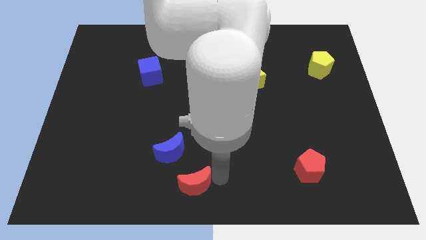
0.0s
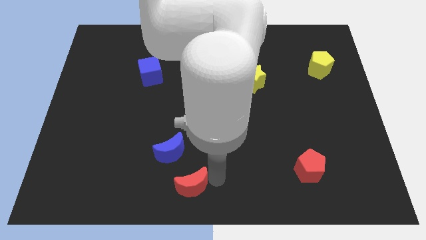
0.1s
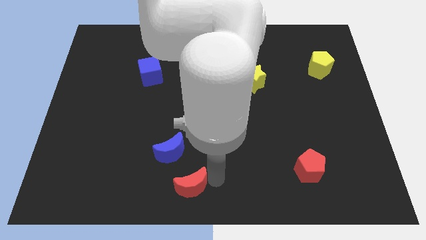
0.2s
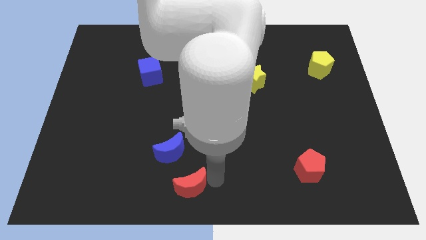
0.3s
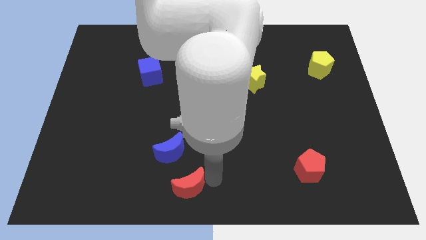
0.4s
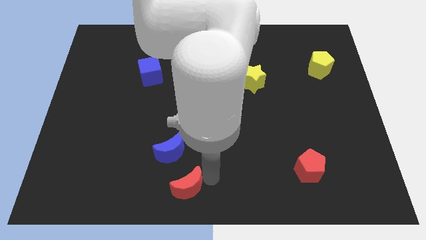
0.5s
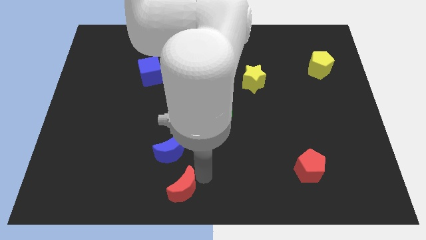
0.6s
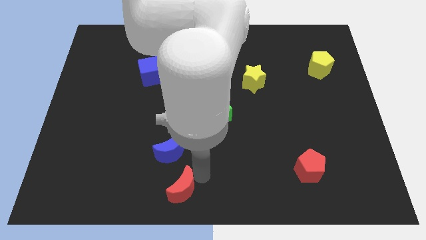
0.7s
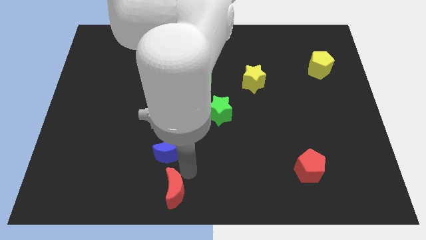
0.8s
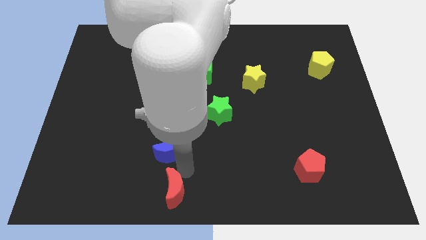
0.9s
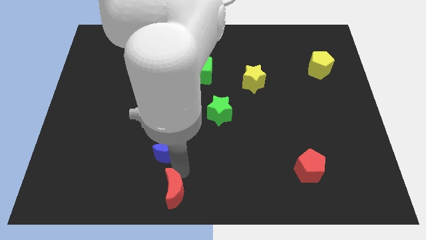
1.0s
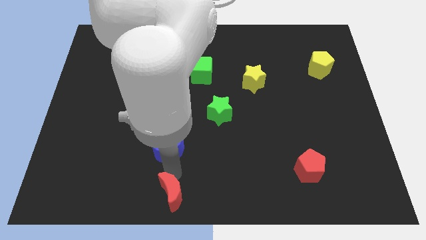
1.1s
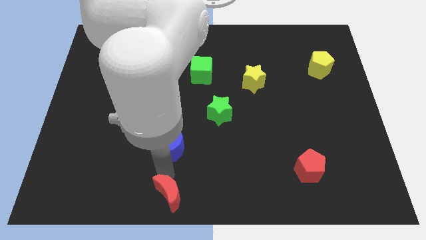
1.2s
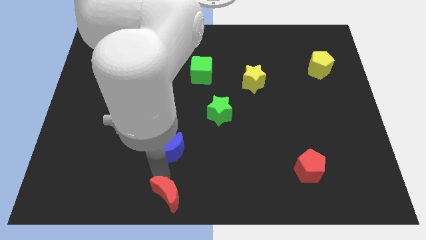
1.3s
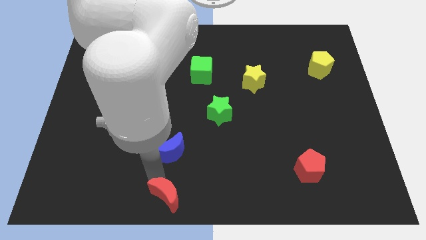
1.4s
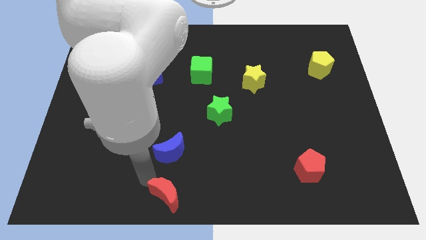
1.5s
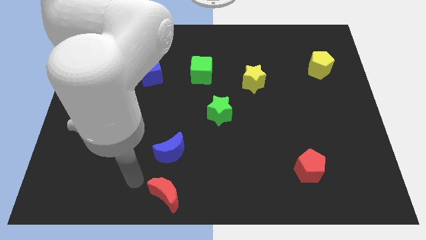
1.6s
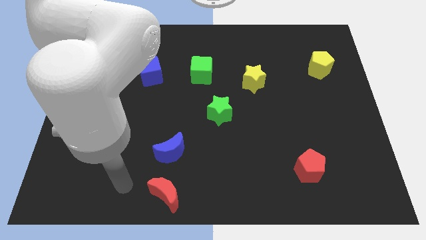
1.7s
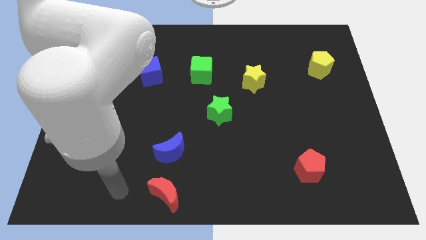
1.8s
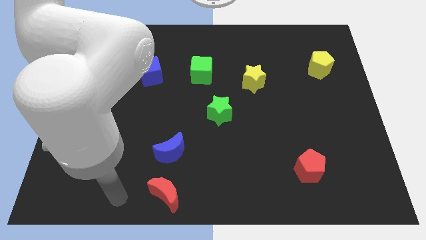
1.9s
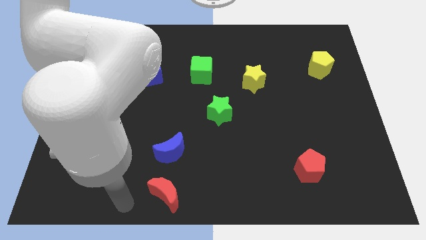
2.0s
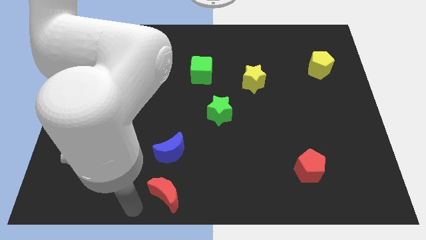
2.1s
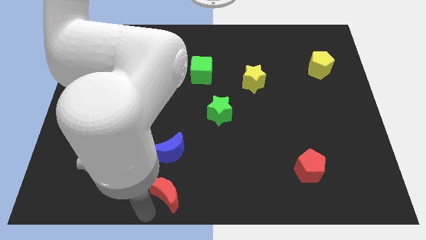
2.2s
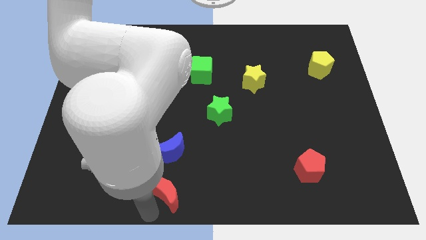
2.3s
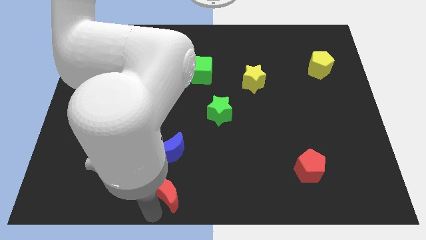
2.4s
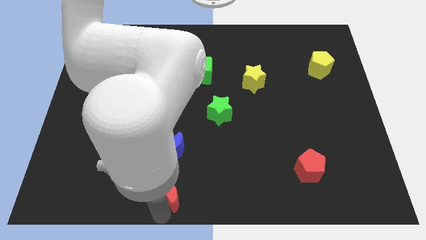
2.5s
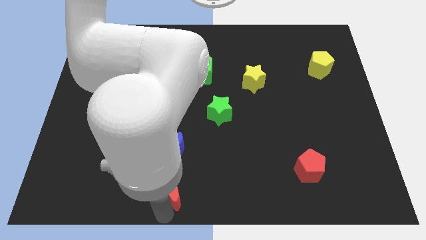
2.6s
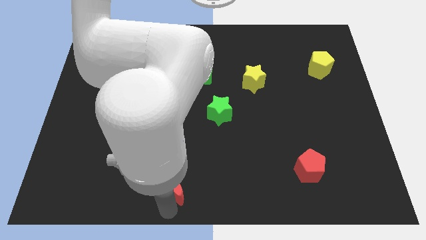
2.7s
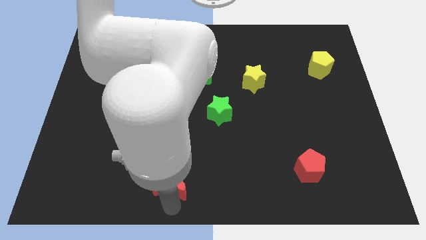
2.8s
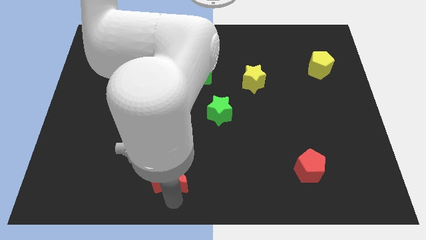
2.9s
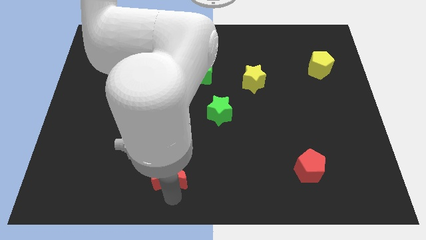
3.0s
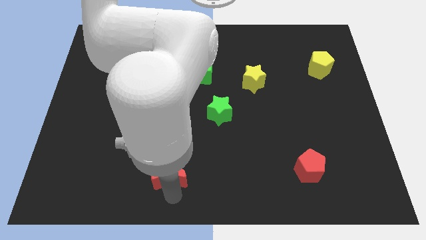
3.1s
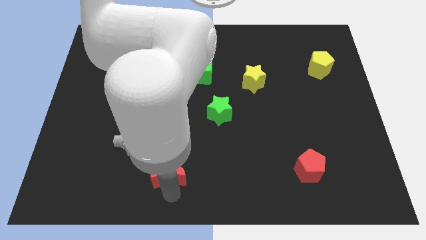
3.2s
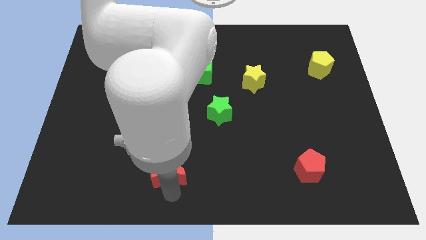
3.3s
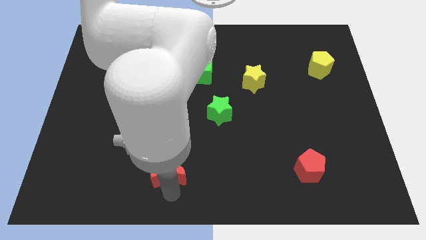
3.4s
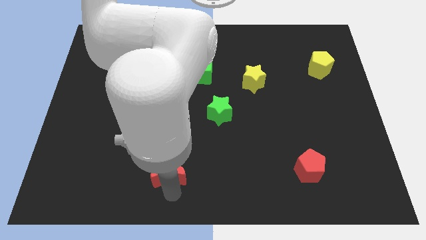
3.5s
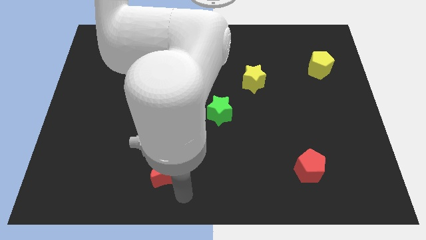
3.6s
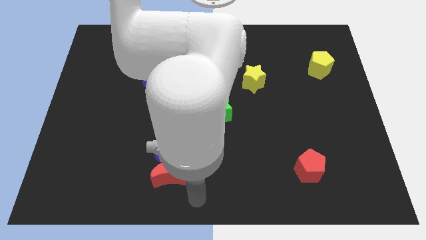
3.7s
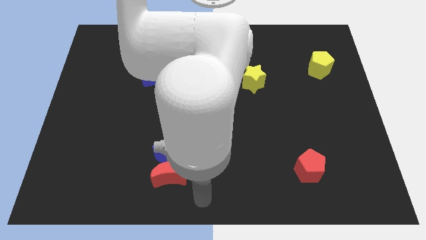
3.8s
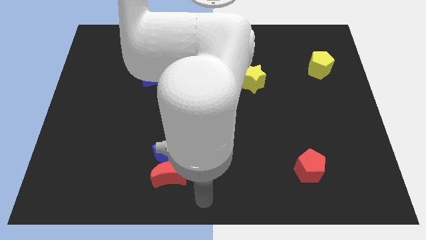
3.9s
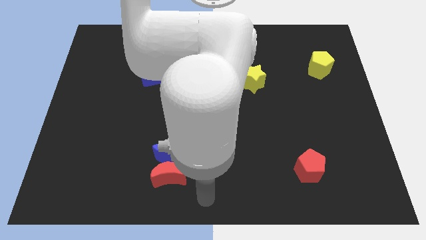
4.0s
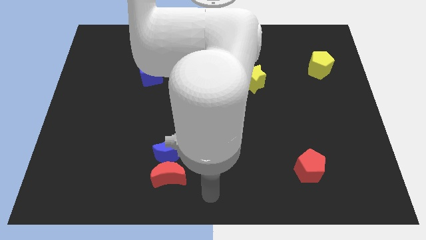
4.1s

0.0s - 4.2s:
push red moon to bottom of the blue moon

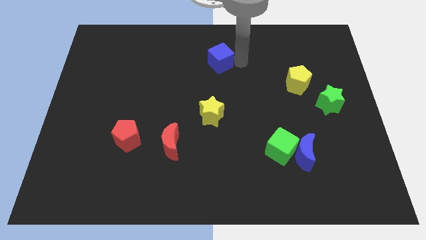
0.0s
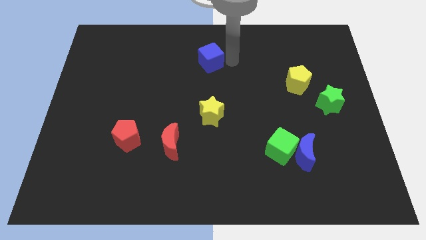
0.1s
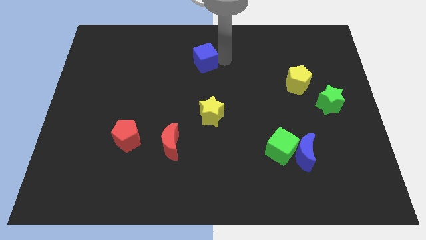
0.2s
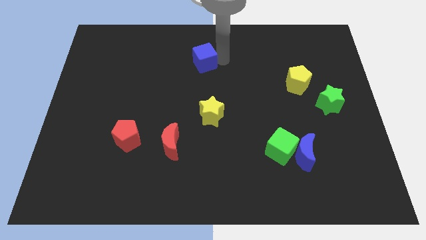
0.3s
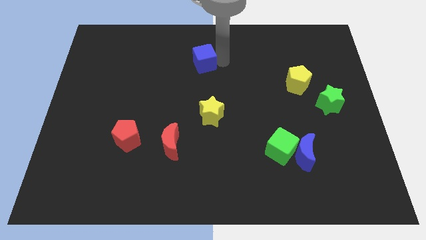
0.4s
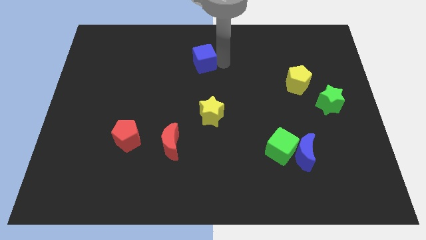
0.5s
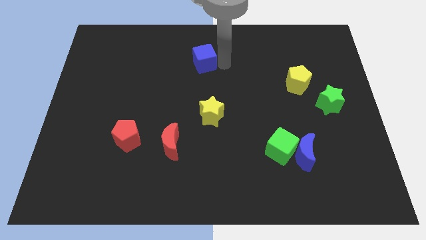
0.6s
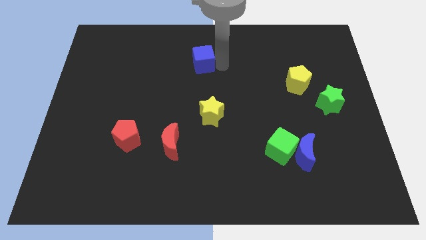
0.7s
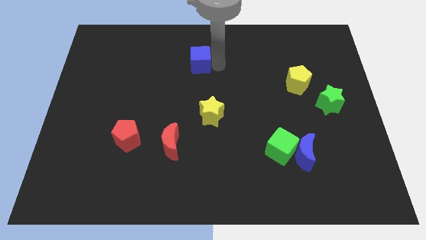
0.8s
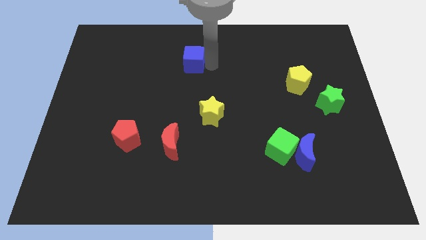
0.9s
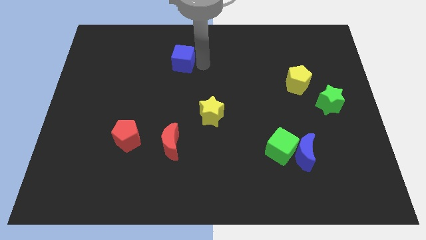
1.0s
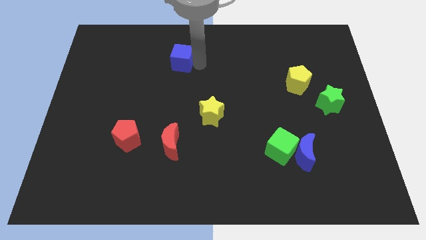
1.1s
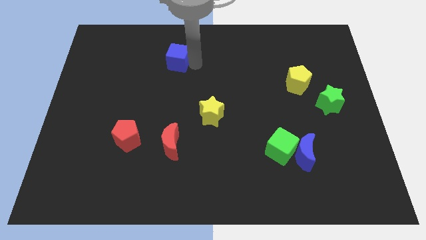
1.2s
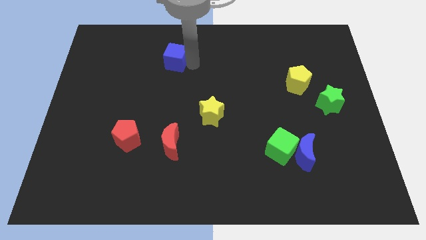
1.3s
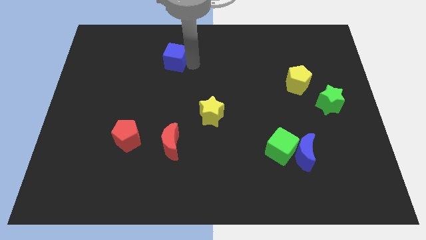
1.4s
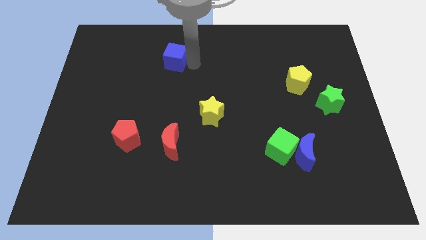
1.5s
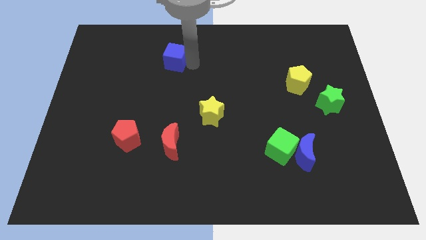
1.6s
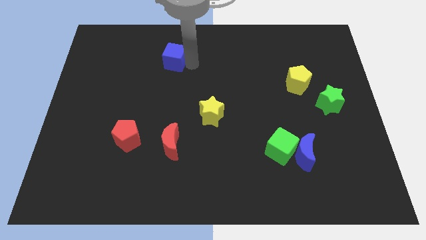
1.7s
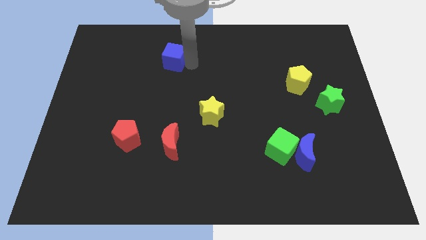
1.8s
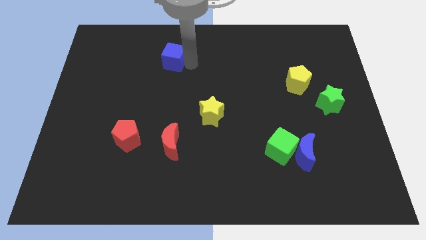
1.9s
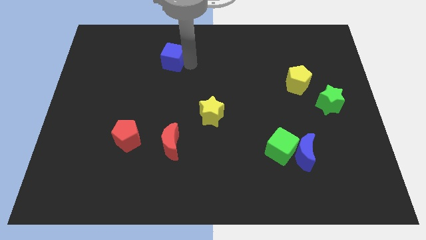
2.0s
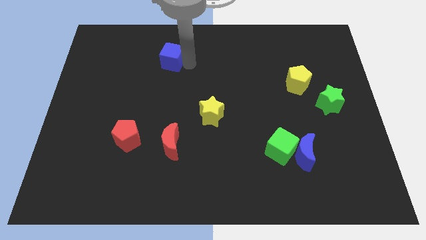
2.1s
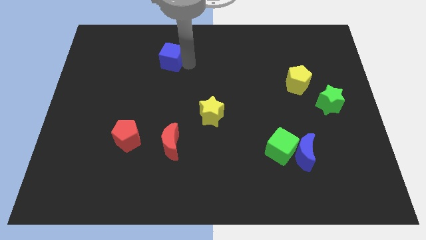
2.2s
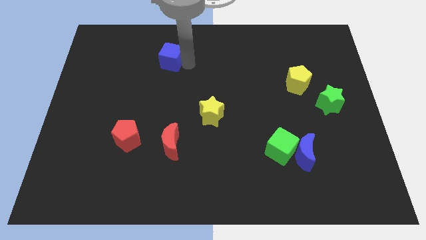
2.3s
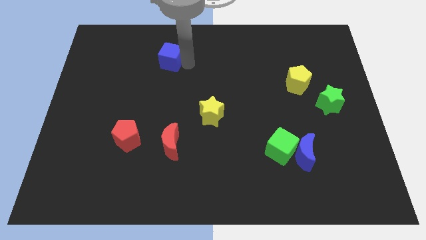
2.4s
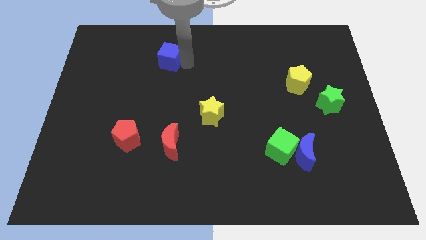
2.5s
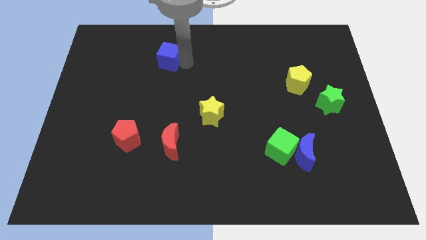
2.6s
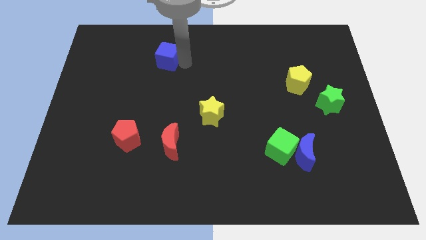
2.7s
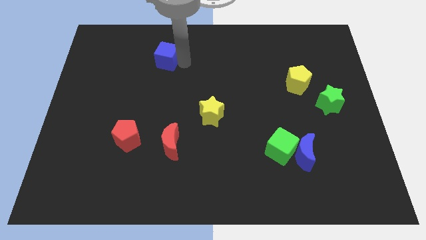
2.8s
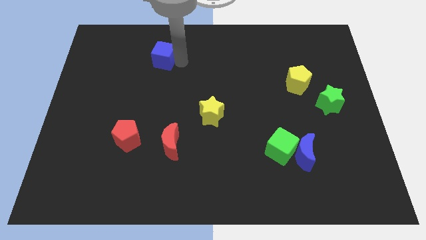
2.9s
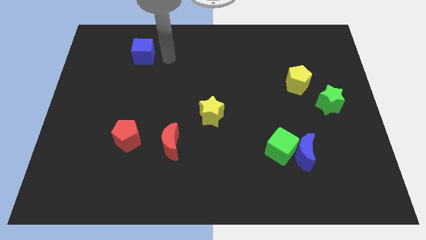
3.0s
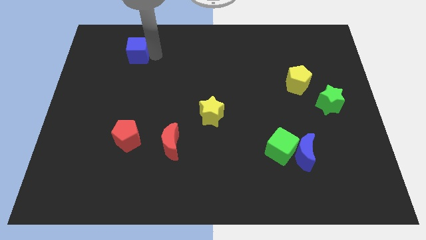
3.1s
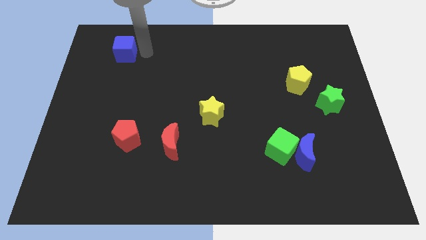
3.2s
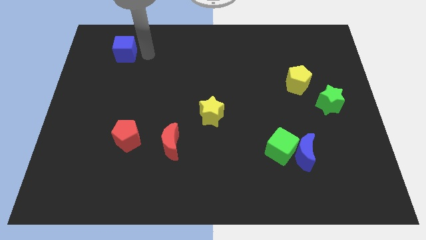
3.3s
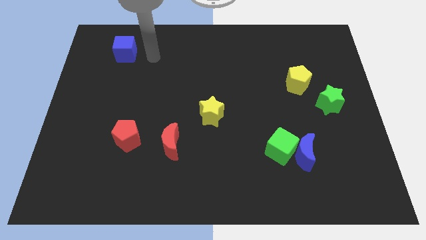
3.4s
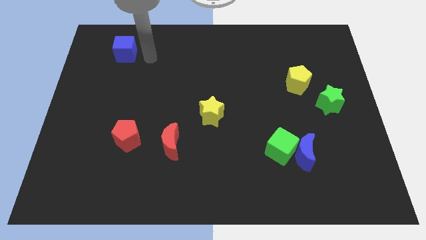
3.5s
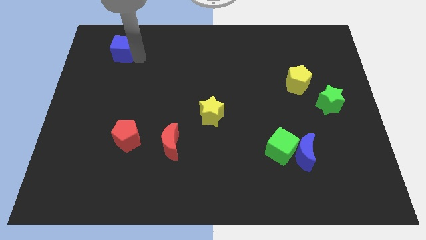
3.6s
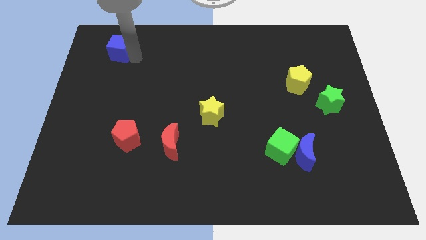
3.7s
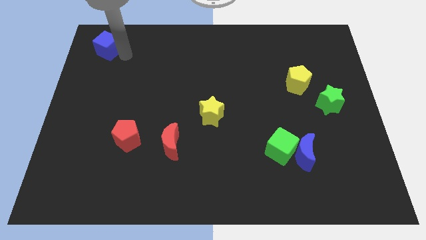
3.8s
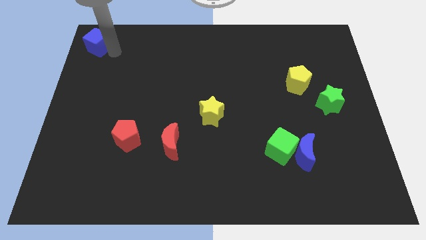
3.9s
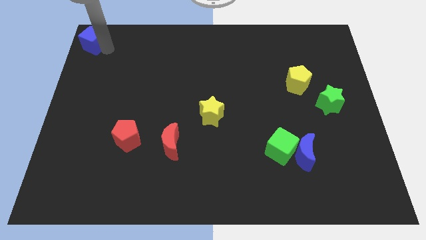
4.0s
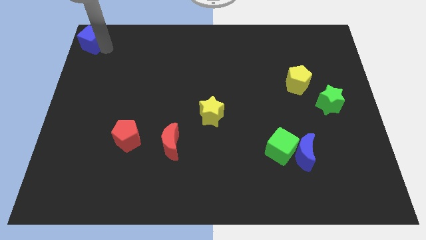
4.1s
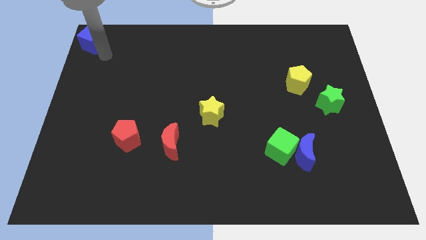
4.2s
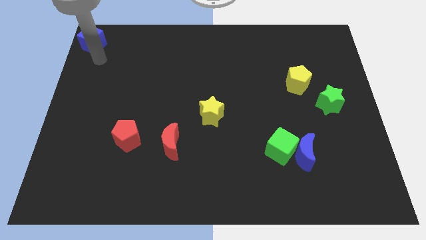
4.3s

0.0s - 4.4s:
push the blue cube to the top left of the board

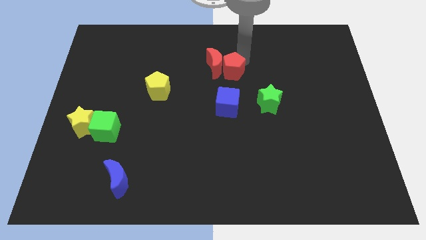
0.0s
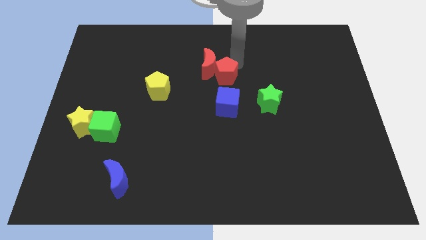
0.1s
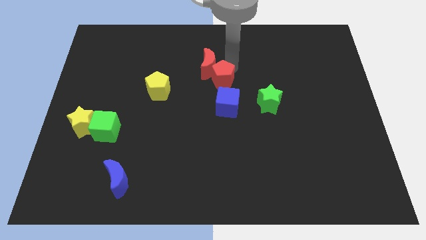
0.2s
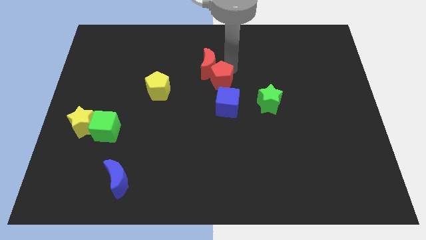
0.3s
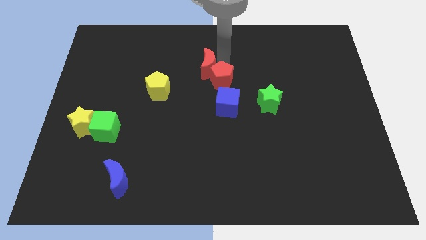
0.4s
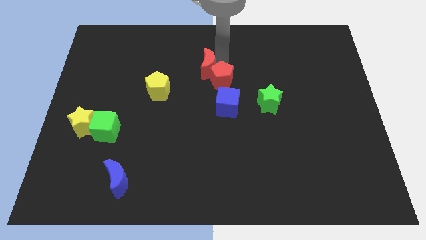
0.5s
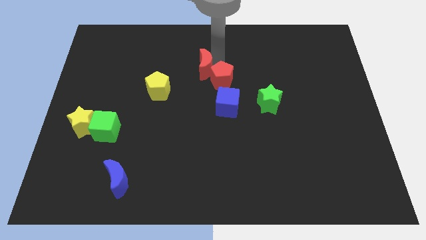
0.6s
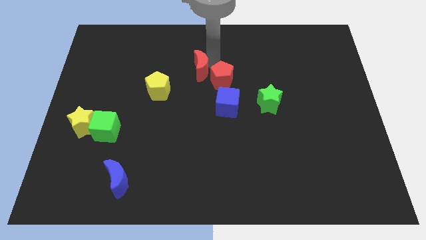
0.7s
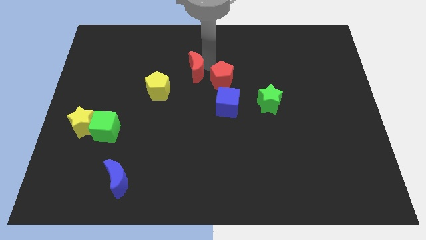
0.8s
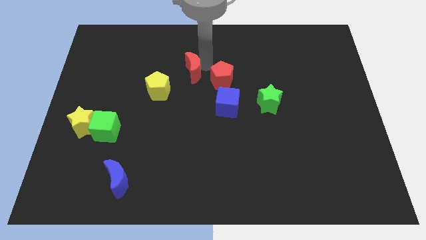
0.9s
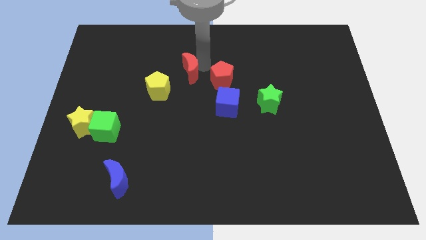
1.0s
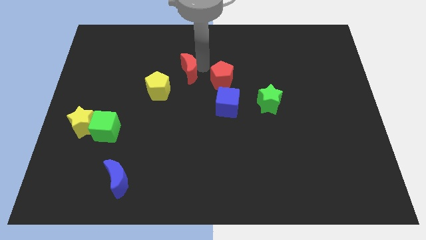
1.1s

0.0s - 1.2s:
separate red blocks from each other
